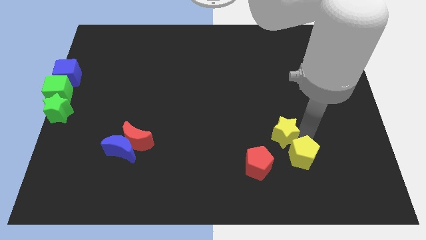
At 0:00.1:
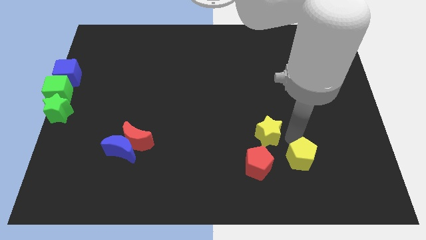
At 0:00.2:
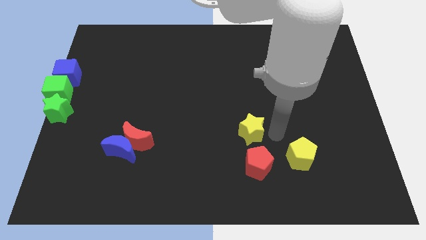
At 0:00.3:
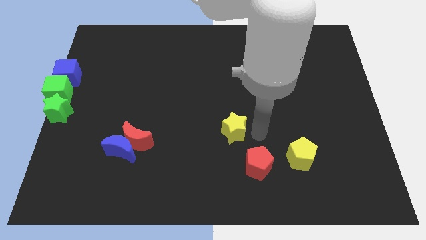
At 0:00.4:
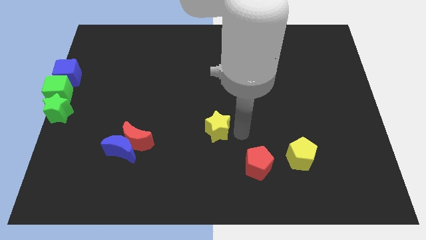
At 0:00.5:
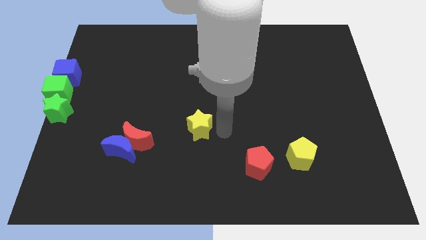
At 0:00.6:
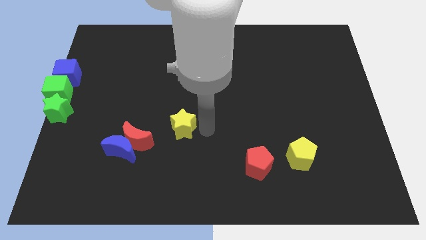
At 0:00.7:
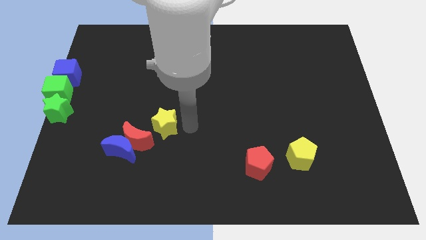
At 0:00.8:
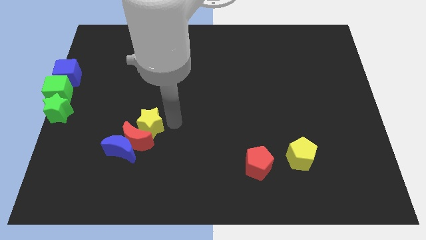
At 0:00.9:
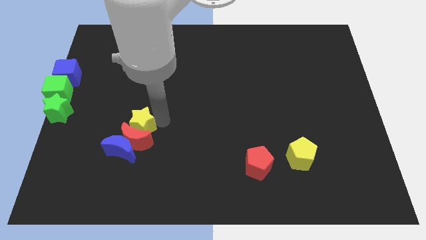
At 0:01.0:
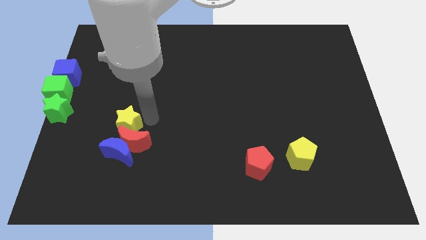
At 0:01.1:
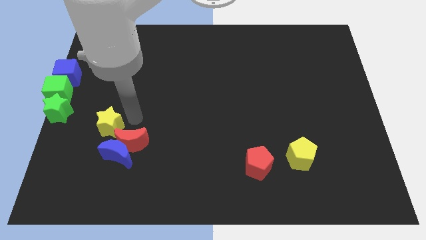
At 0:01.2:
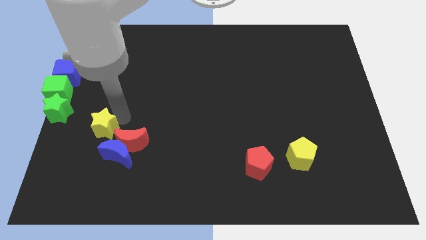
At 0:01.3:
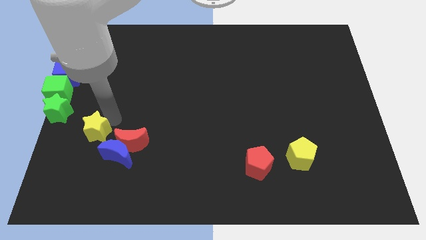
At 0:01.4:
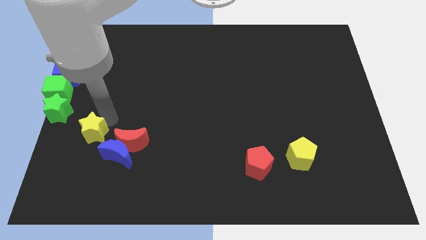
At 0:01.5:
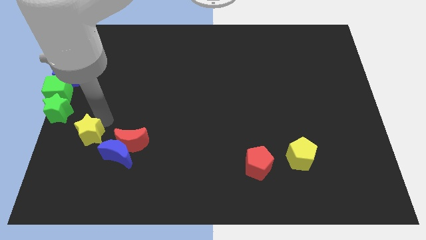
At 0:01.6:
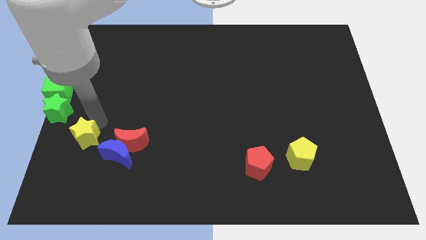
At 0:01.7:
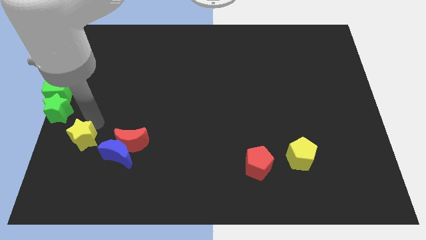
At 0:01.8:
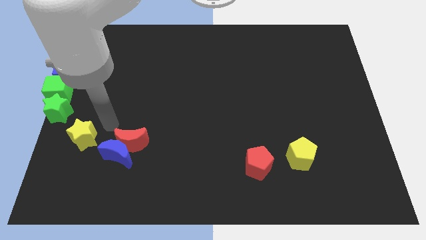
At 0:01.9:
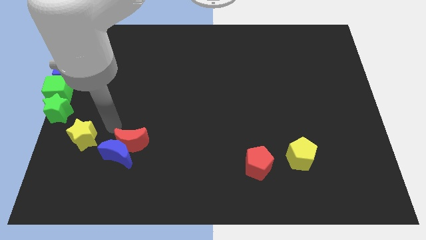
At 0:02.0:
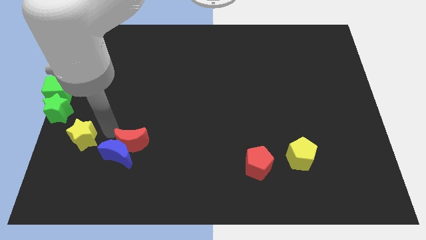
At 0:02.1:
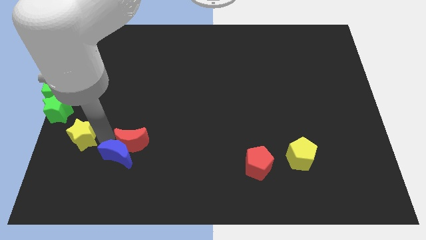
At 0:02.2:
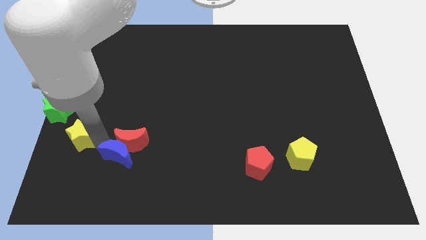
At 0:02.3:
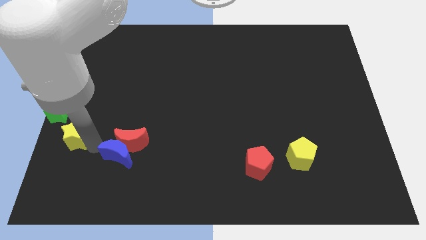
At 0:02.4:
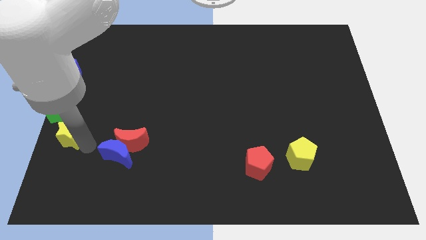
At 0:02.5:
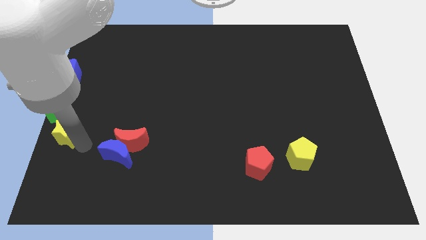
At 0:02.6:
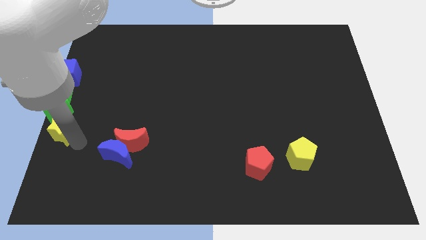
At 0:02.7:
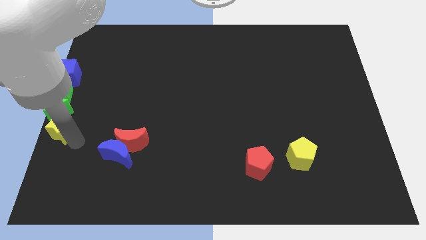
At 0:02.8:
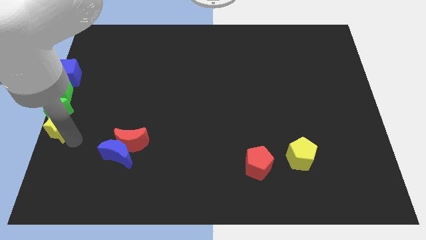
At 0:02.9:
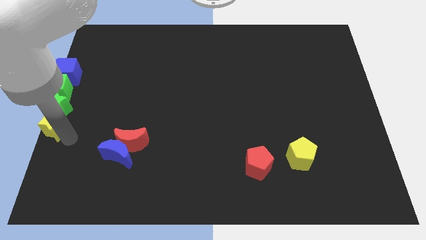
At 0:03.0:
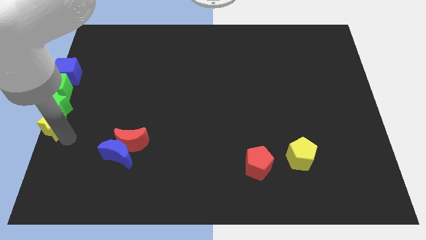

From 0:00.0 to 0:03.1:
move the yellow star below into the green star

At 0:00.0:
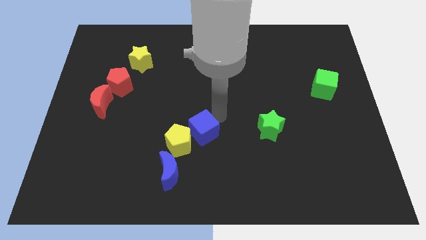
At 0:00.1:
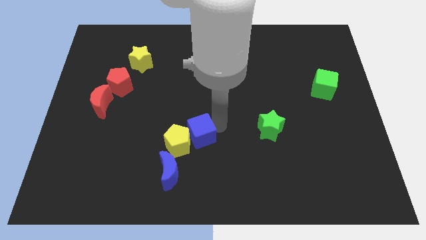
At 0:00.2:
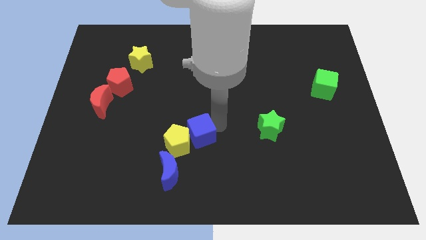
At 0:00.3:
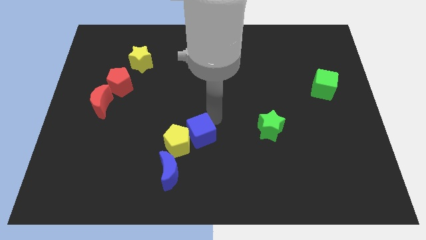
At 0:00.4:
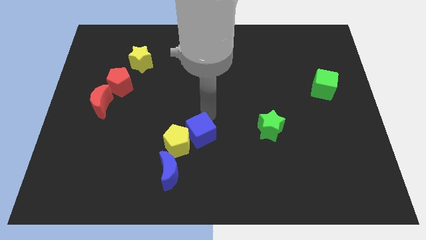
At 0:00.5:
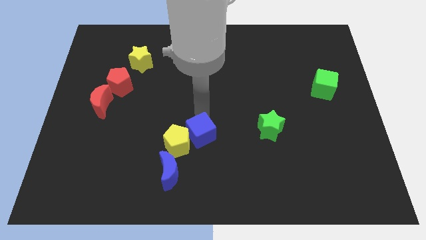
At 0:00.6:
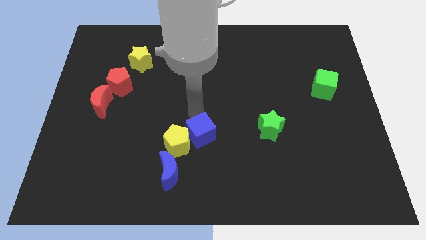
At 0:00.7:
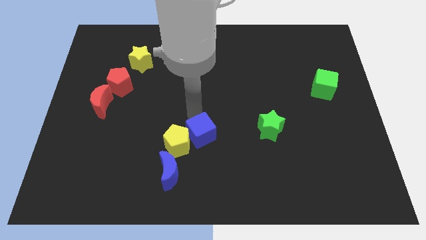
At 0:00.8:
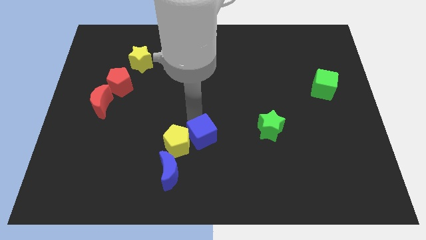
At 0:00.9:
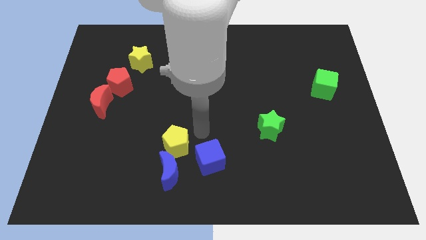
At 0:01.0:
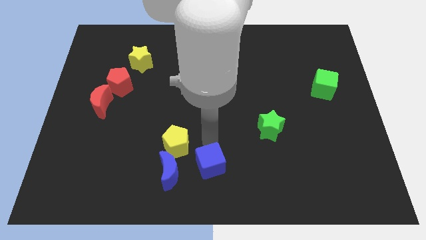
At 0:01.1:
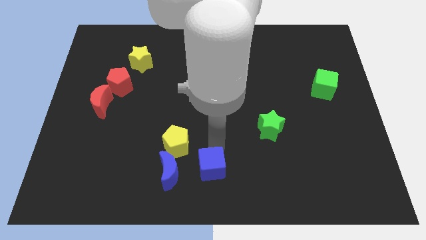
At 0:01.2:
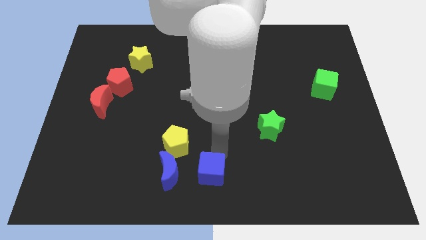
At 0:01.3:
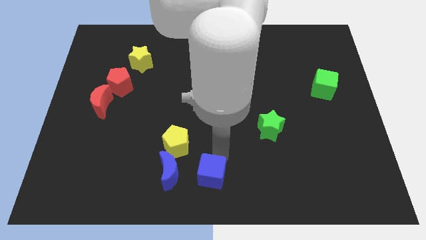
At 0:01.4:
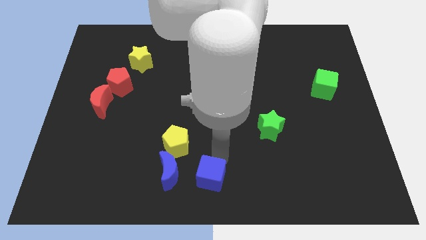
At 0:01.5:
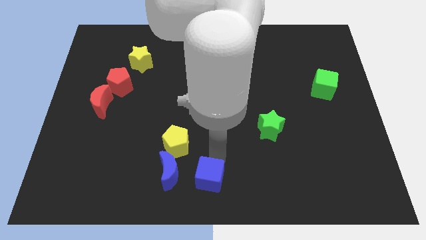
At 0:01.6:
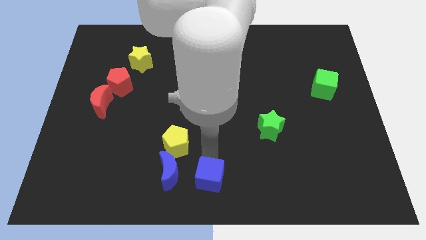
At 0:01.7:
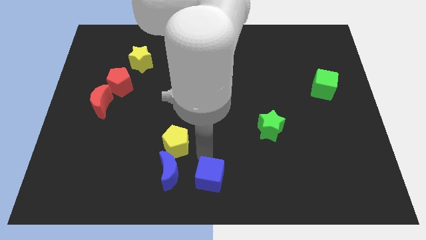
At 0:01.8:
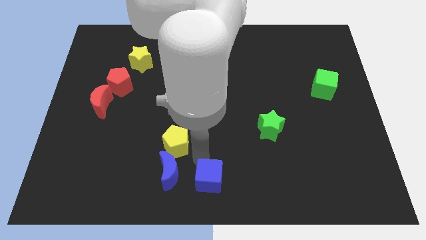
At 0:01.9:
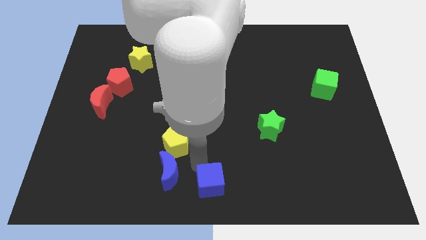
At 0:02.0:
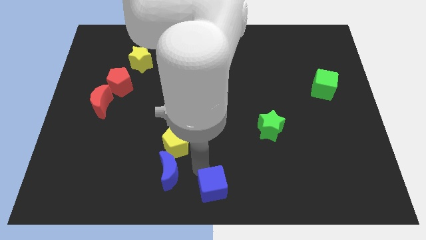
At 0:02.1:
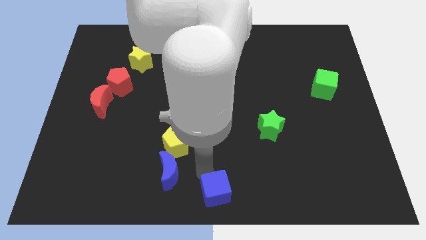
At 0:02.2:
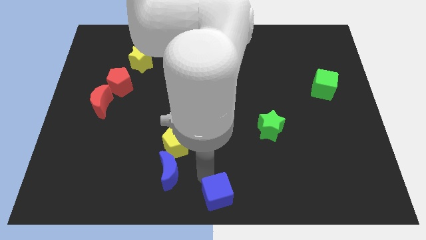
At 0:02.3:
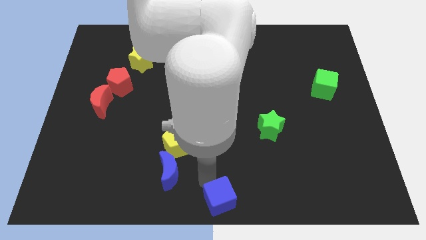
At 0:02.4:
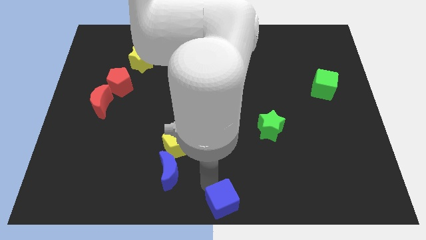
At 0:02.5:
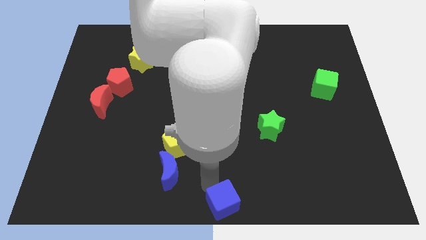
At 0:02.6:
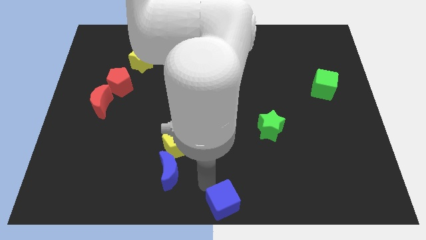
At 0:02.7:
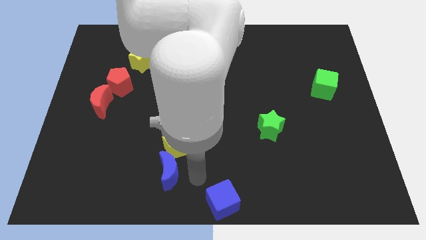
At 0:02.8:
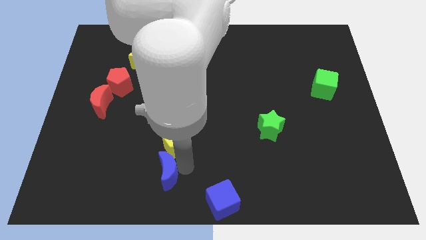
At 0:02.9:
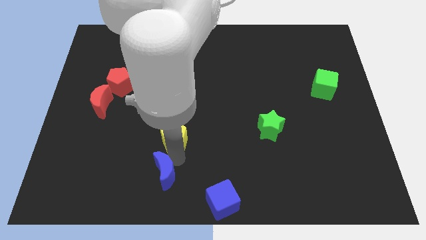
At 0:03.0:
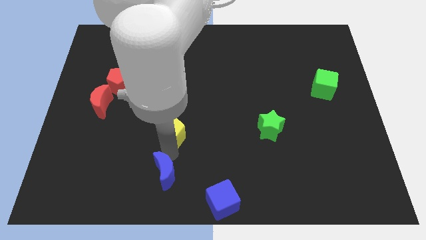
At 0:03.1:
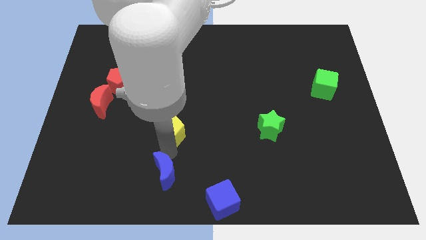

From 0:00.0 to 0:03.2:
move the blue cube to the bottom center

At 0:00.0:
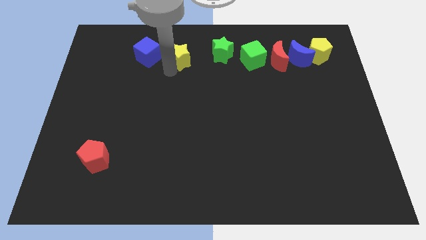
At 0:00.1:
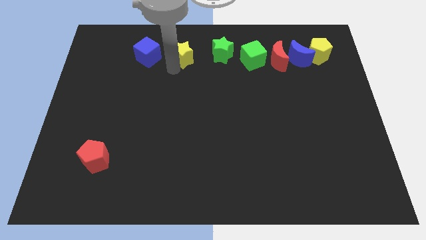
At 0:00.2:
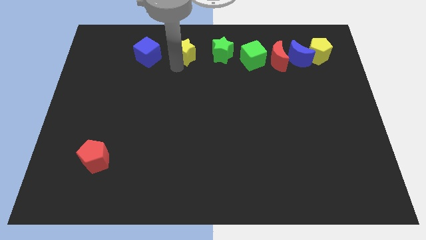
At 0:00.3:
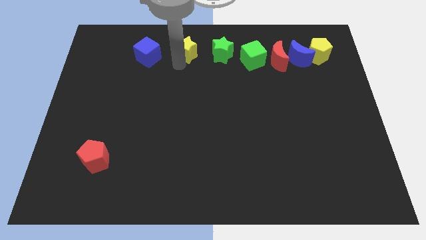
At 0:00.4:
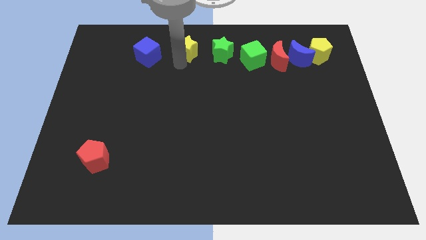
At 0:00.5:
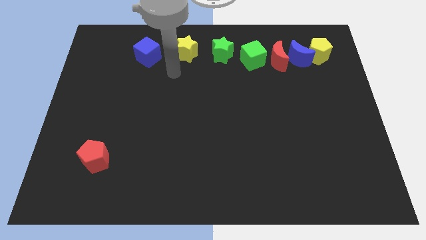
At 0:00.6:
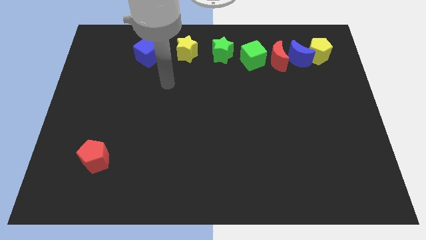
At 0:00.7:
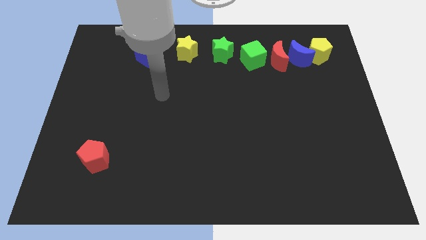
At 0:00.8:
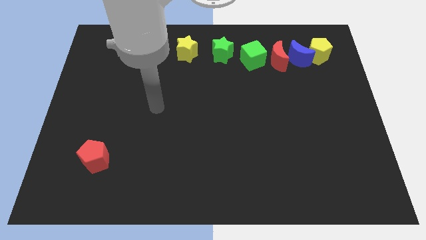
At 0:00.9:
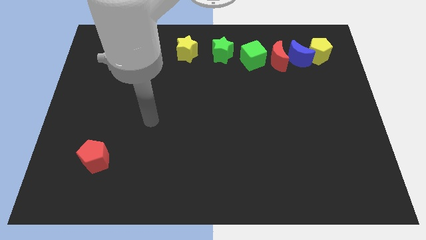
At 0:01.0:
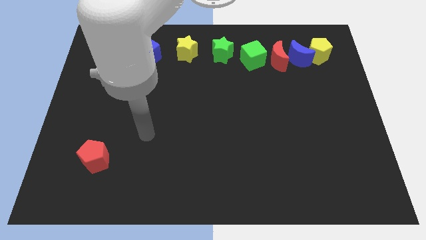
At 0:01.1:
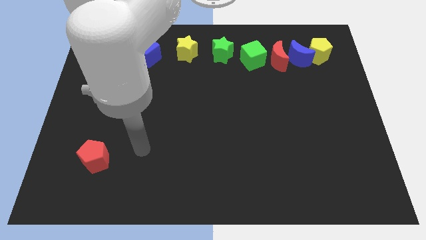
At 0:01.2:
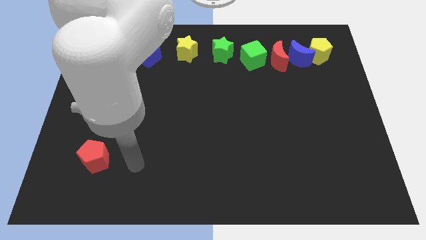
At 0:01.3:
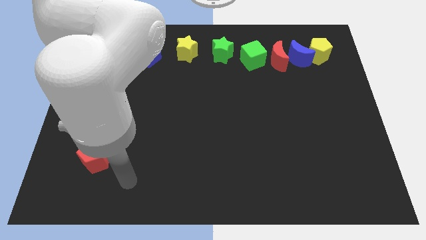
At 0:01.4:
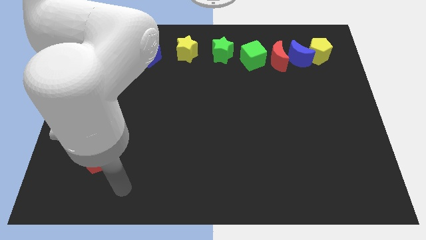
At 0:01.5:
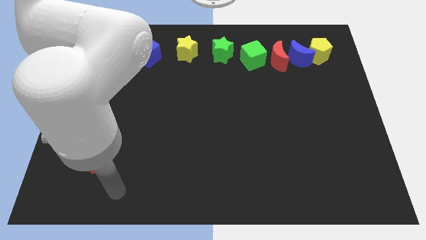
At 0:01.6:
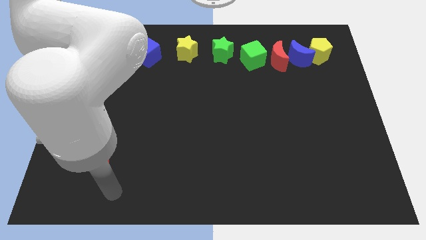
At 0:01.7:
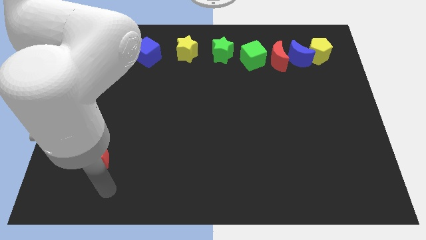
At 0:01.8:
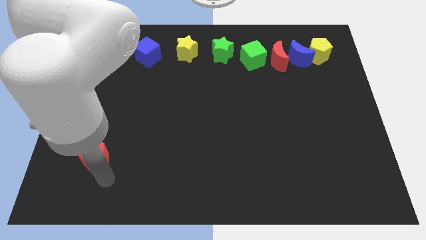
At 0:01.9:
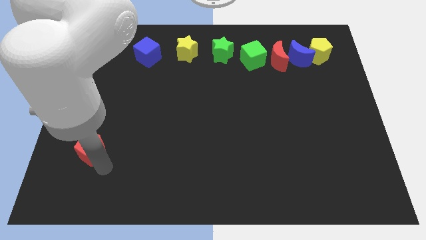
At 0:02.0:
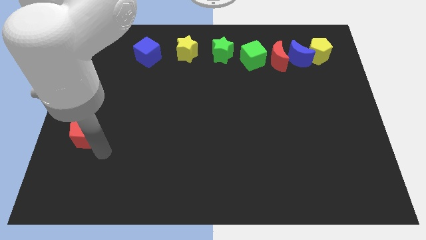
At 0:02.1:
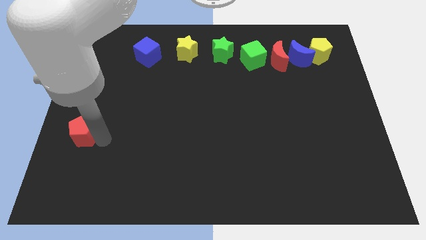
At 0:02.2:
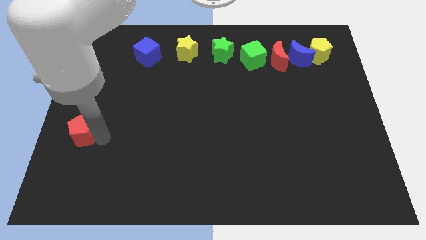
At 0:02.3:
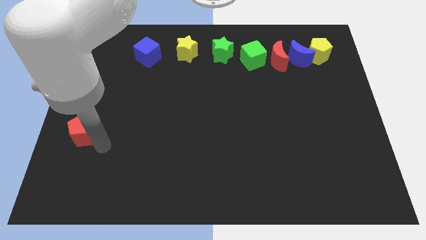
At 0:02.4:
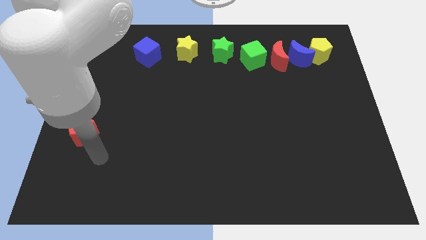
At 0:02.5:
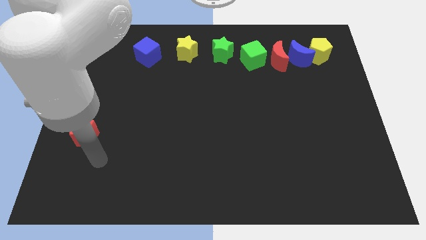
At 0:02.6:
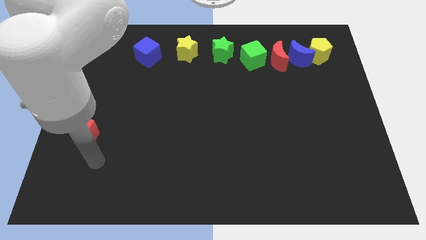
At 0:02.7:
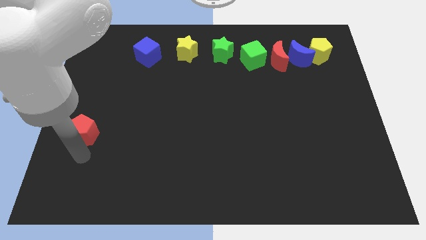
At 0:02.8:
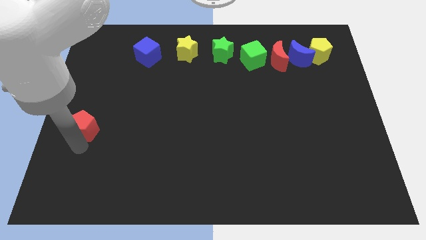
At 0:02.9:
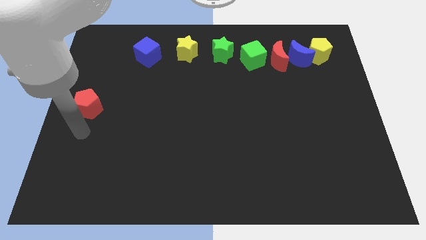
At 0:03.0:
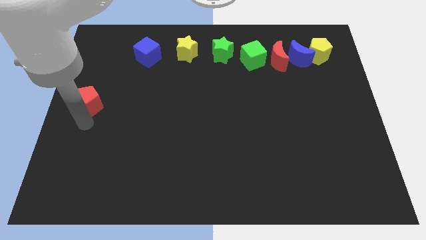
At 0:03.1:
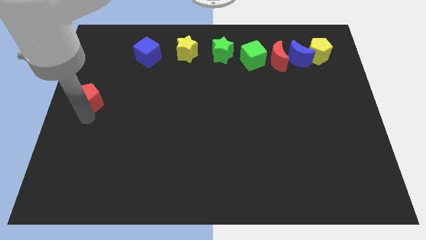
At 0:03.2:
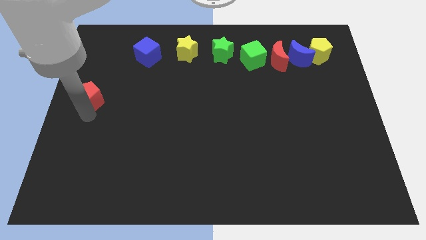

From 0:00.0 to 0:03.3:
place the red pentagon diagonally bottom left to the blue cube
